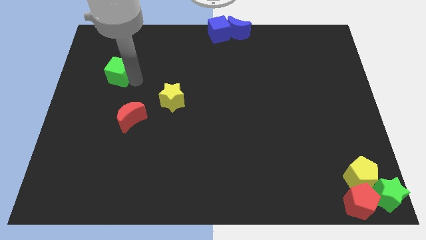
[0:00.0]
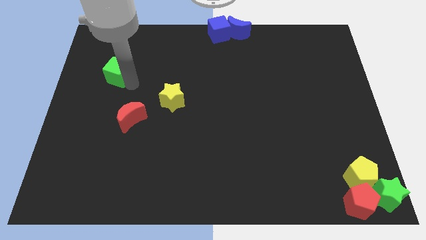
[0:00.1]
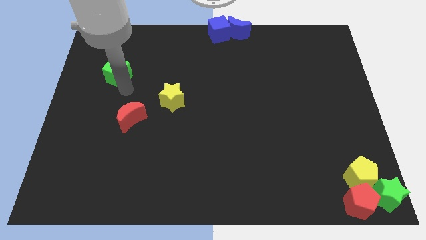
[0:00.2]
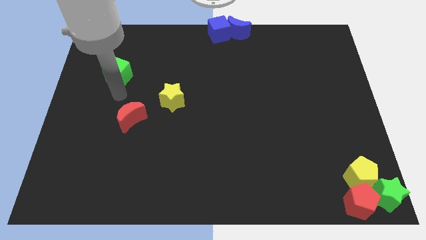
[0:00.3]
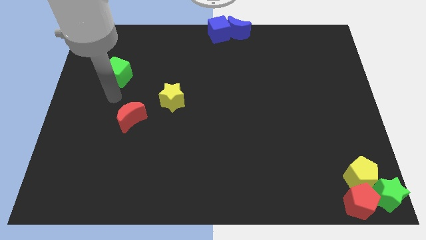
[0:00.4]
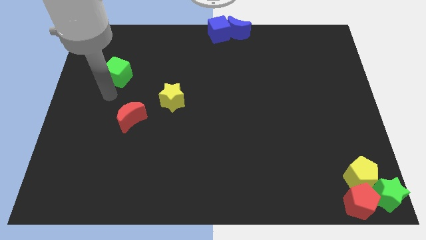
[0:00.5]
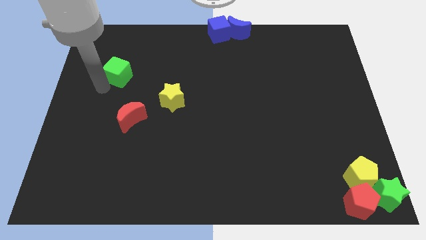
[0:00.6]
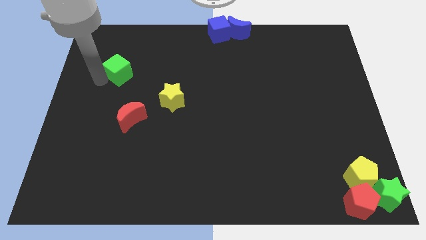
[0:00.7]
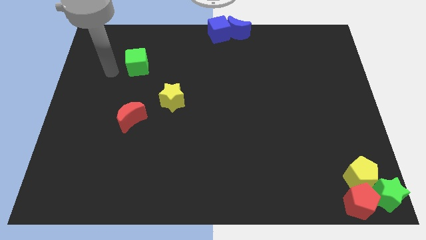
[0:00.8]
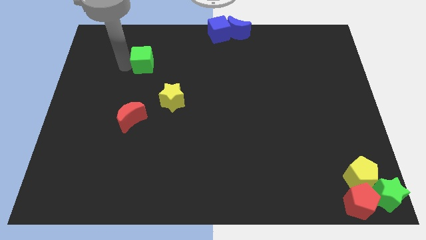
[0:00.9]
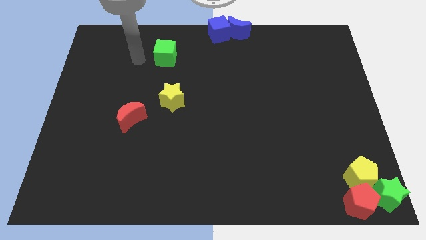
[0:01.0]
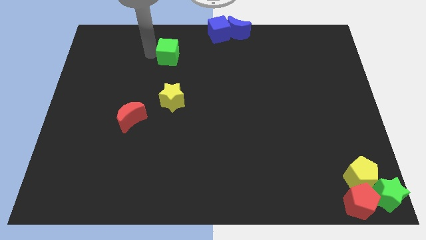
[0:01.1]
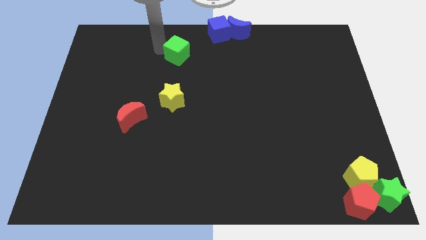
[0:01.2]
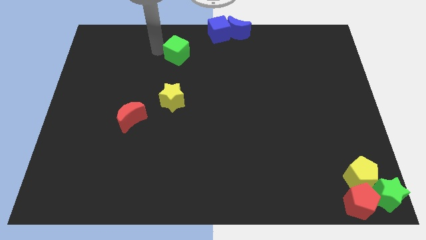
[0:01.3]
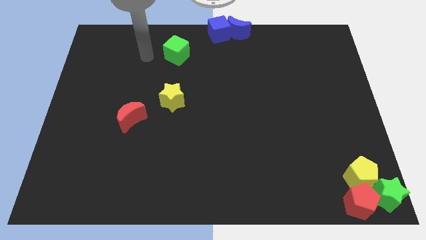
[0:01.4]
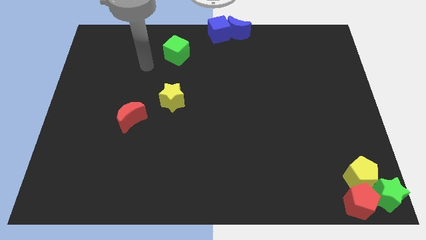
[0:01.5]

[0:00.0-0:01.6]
place the green cube parallel to the yellow star

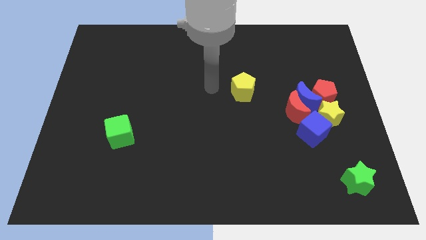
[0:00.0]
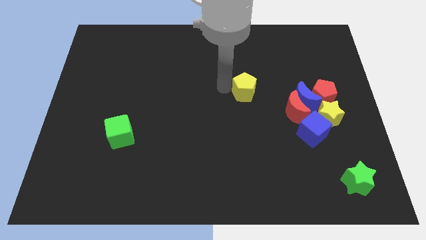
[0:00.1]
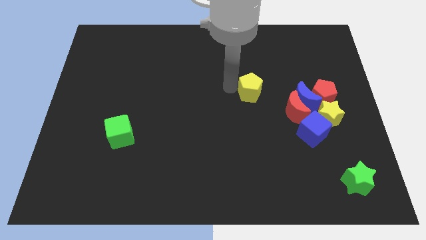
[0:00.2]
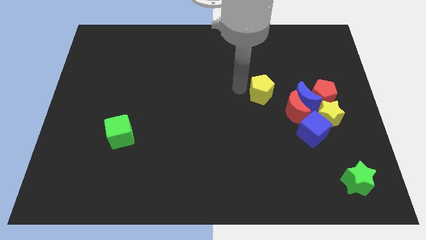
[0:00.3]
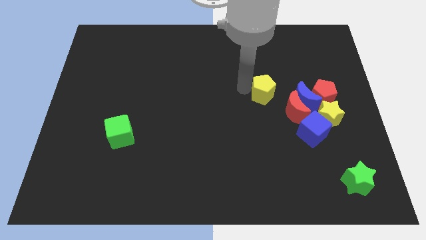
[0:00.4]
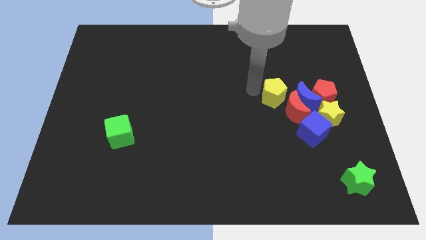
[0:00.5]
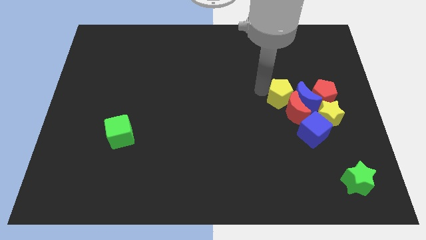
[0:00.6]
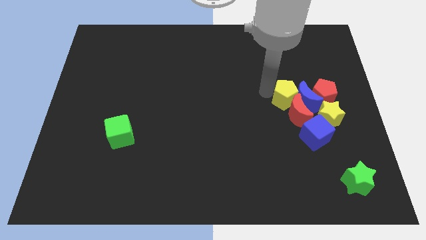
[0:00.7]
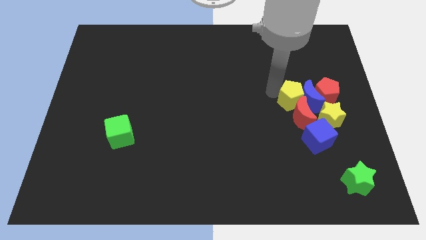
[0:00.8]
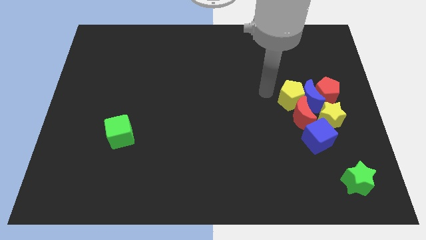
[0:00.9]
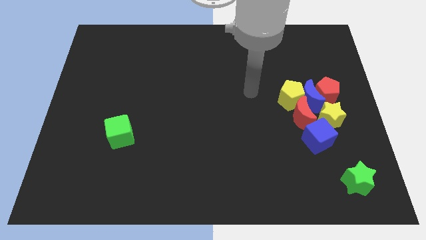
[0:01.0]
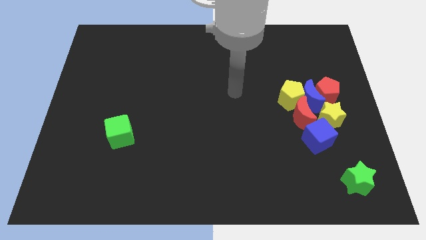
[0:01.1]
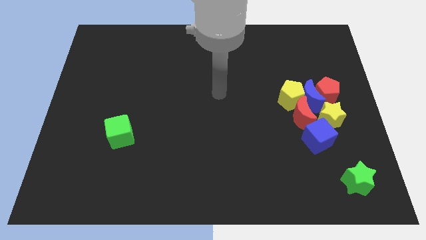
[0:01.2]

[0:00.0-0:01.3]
move the yellow pentagon into the blue crescent and red crescent

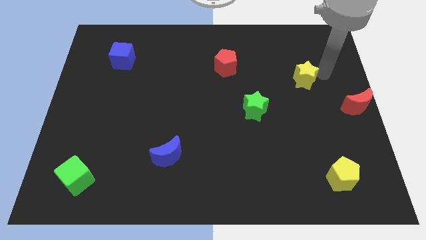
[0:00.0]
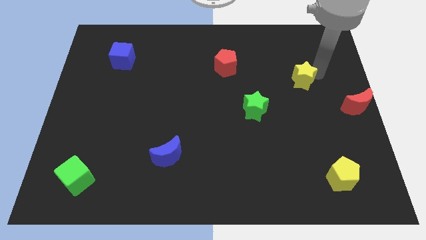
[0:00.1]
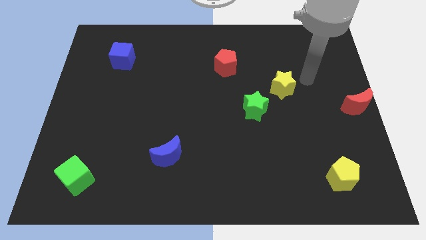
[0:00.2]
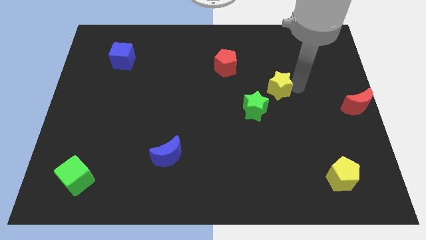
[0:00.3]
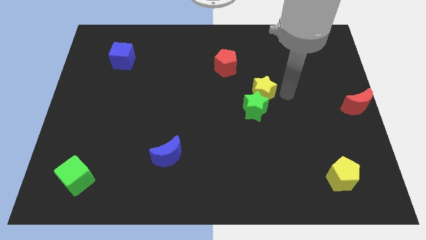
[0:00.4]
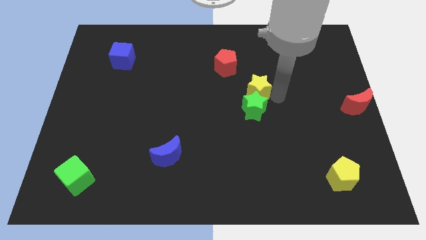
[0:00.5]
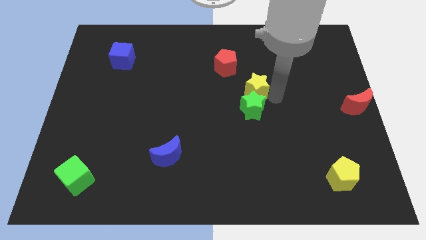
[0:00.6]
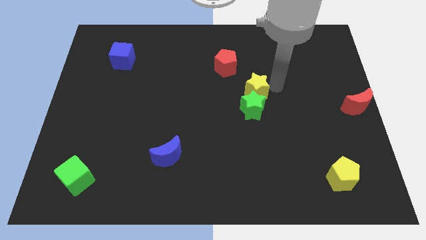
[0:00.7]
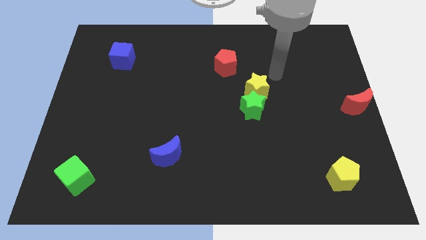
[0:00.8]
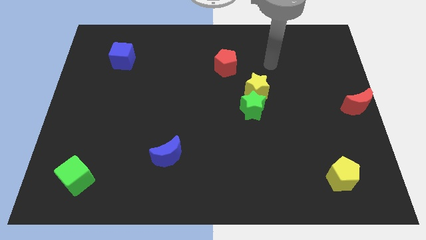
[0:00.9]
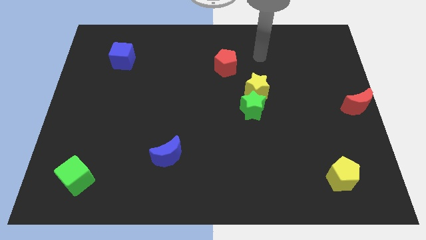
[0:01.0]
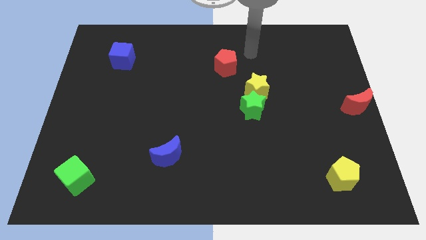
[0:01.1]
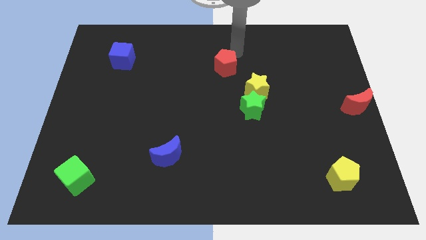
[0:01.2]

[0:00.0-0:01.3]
push the yellow star into green star

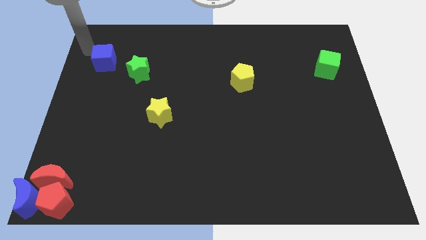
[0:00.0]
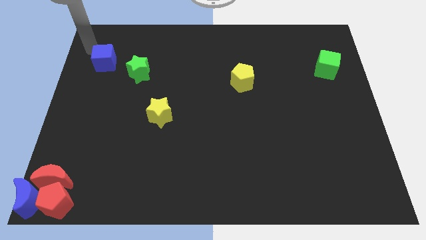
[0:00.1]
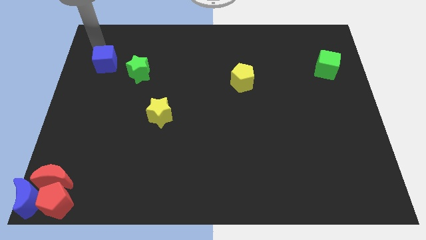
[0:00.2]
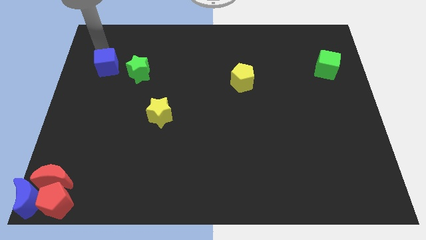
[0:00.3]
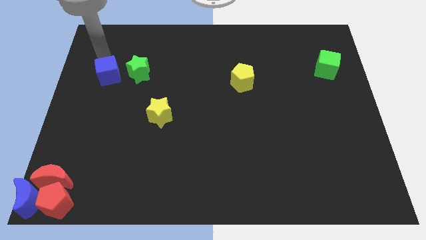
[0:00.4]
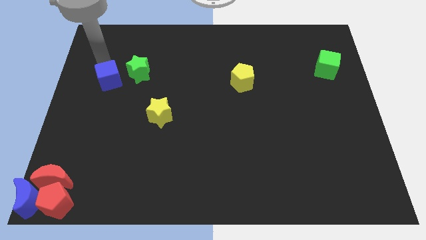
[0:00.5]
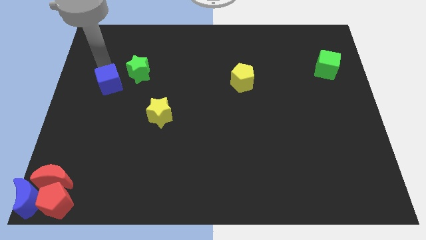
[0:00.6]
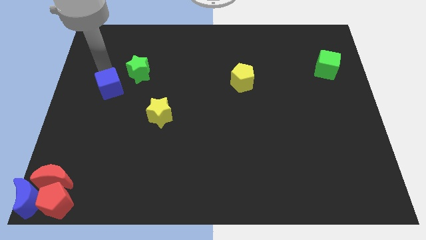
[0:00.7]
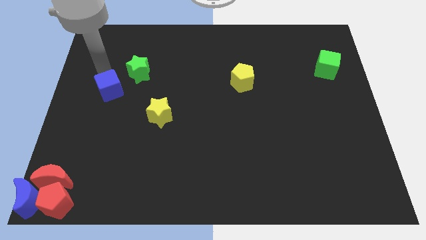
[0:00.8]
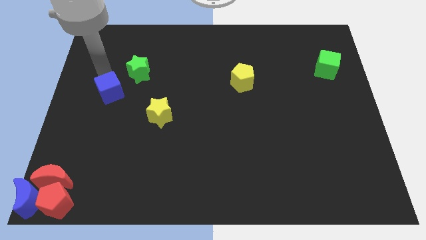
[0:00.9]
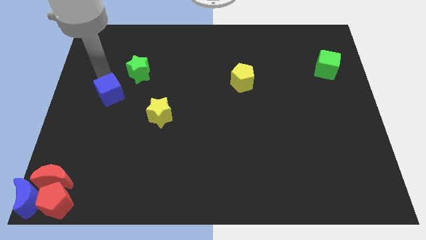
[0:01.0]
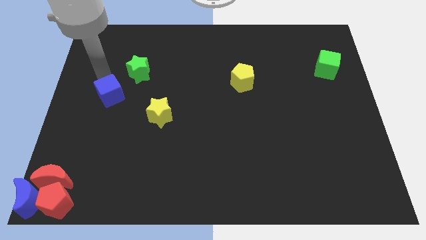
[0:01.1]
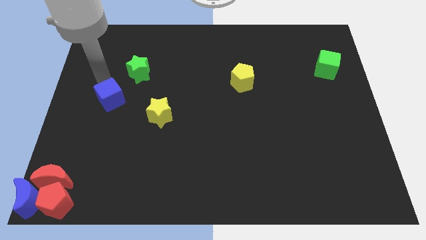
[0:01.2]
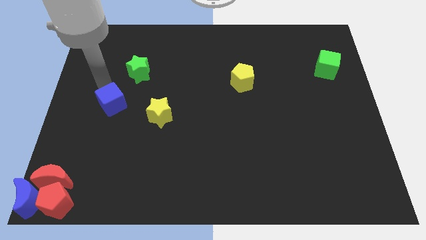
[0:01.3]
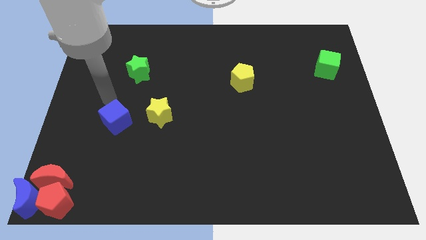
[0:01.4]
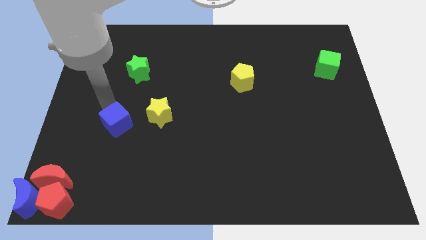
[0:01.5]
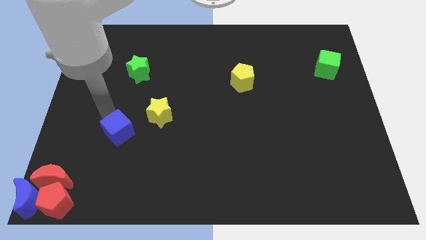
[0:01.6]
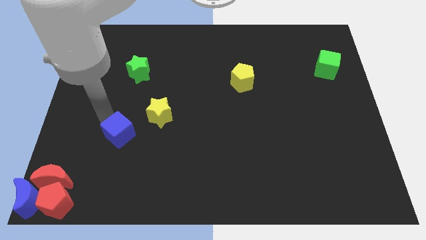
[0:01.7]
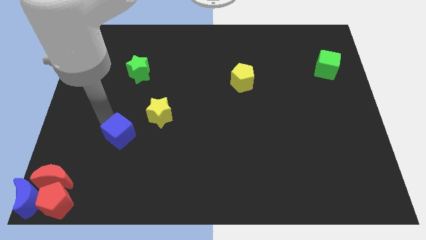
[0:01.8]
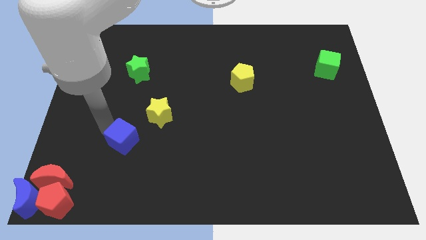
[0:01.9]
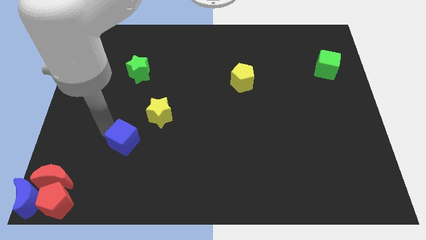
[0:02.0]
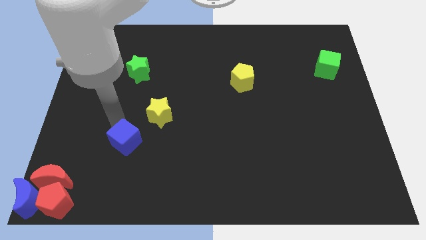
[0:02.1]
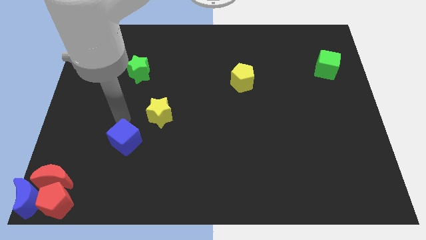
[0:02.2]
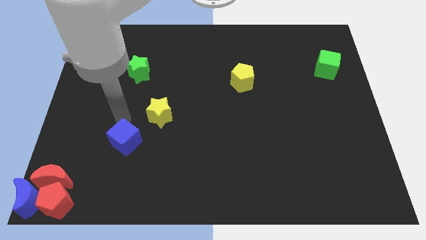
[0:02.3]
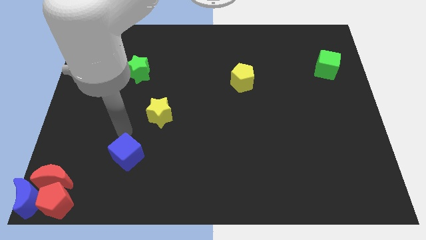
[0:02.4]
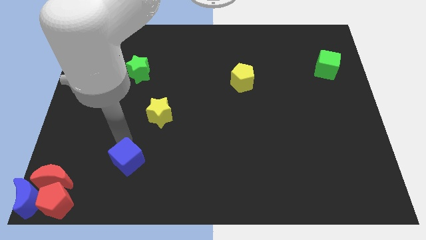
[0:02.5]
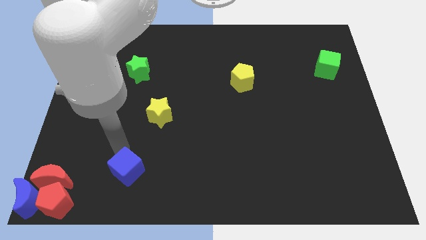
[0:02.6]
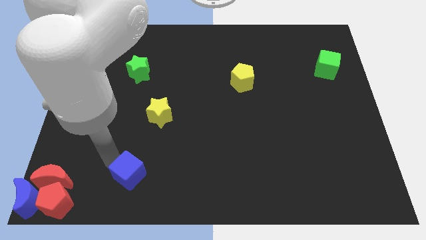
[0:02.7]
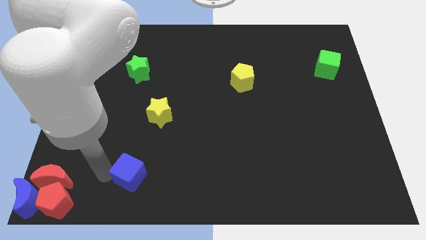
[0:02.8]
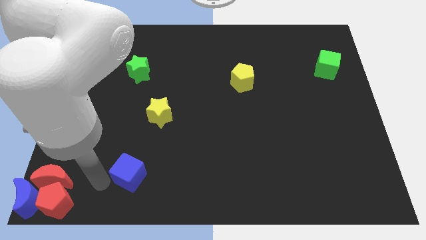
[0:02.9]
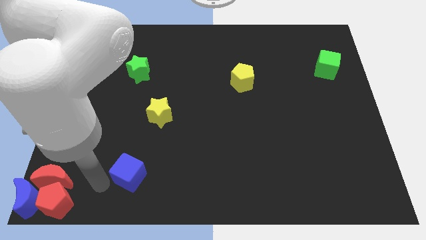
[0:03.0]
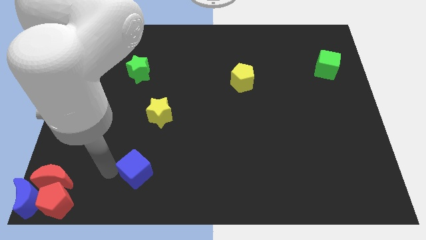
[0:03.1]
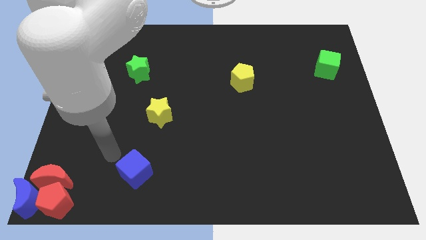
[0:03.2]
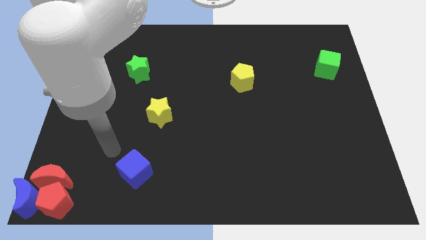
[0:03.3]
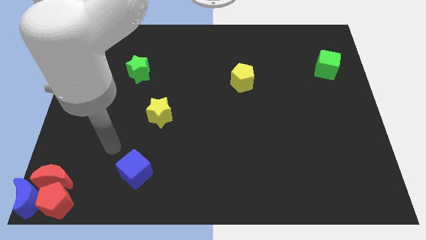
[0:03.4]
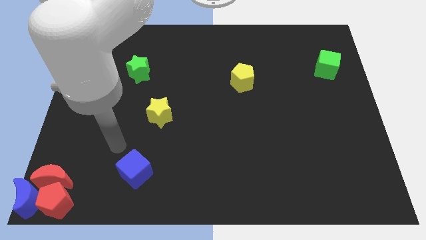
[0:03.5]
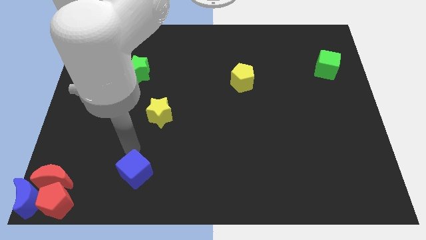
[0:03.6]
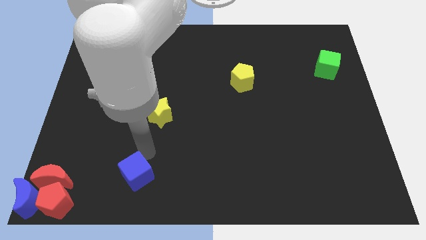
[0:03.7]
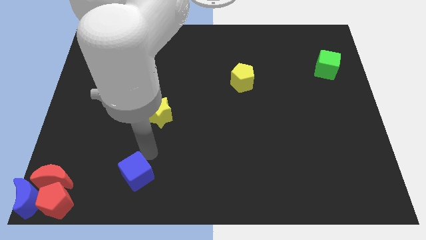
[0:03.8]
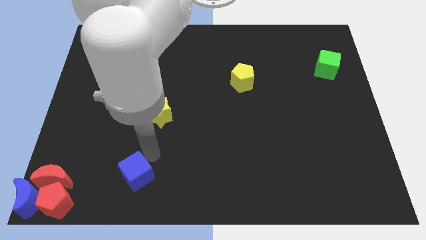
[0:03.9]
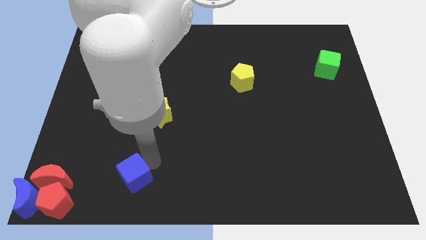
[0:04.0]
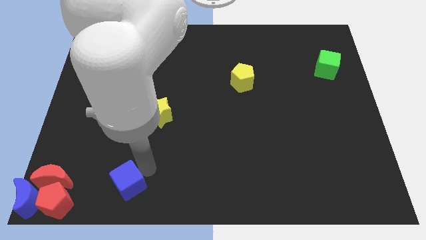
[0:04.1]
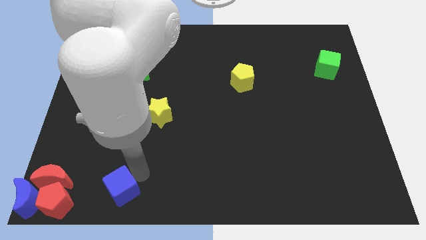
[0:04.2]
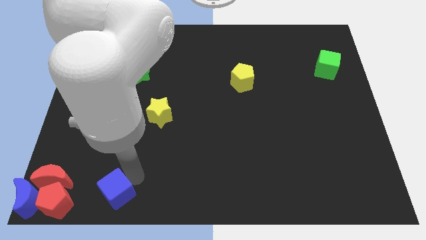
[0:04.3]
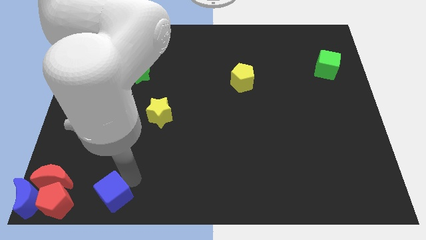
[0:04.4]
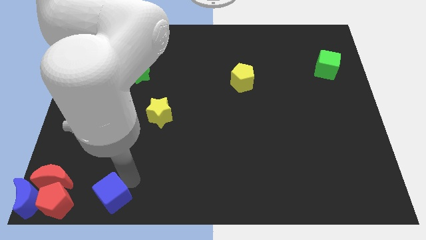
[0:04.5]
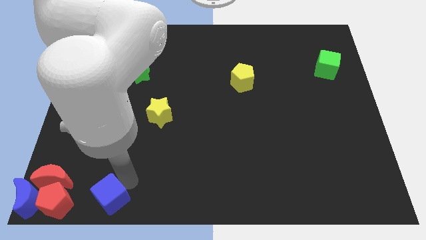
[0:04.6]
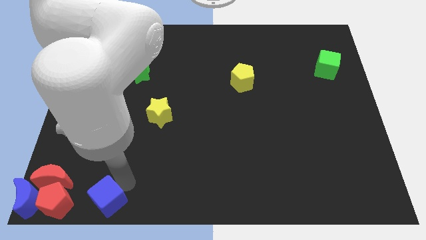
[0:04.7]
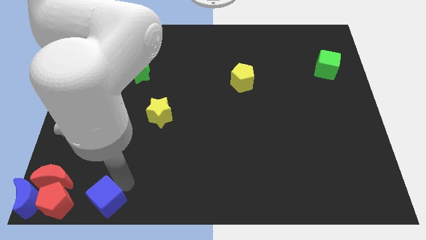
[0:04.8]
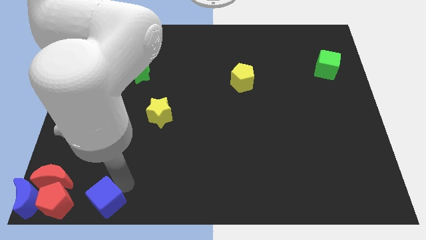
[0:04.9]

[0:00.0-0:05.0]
place the blue moon right to the red pentagon
